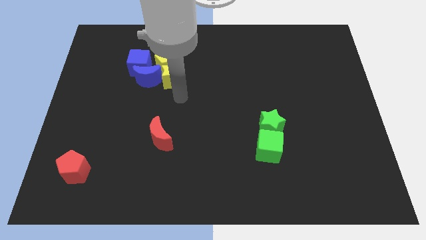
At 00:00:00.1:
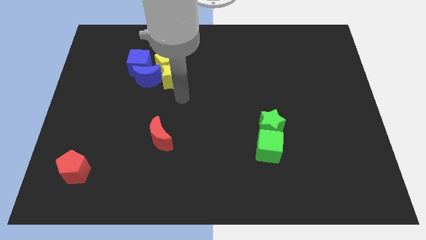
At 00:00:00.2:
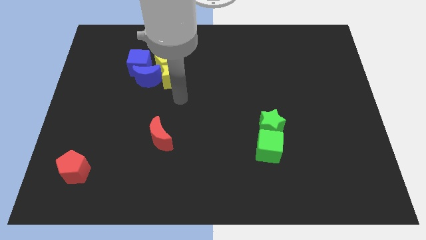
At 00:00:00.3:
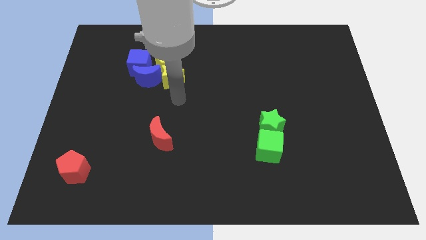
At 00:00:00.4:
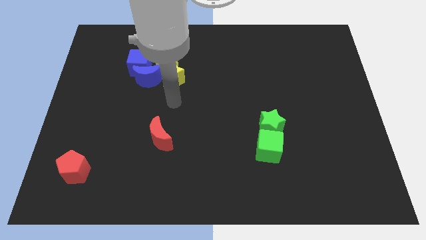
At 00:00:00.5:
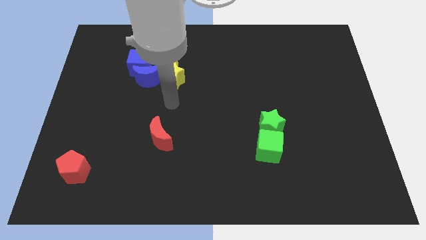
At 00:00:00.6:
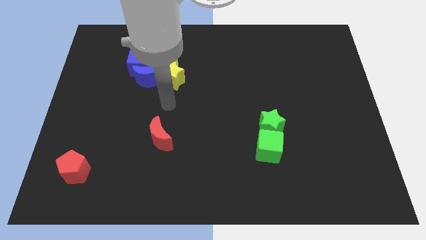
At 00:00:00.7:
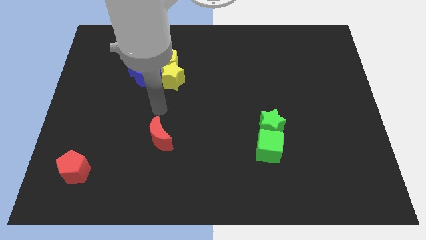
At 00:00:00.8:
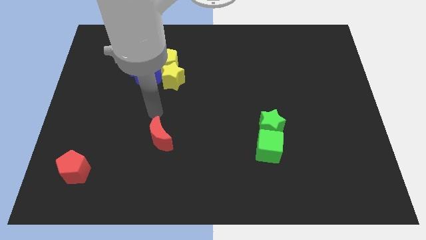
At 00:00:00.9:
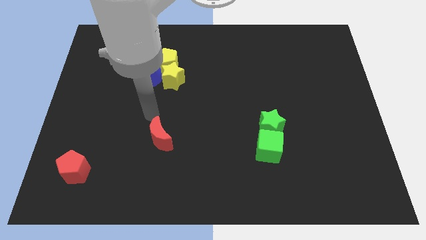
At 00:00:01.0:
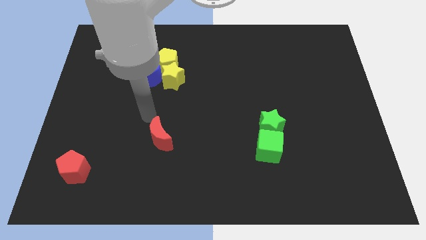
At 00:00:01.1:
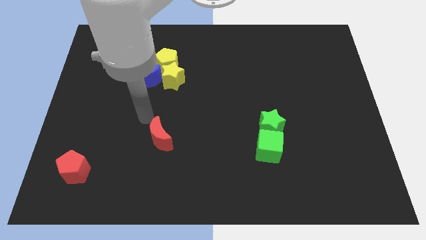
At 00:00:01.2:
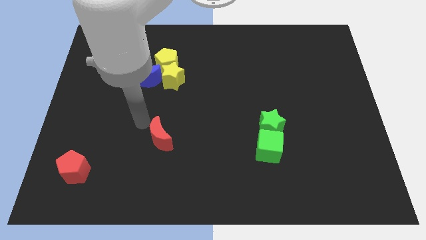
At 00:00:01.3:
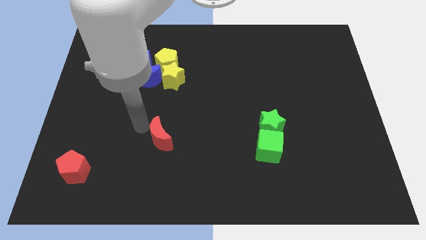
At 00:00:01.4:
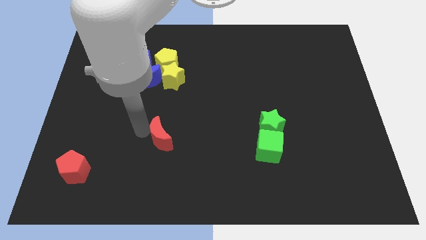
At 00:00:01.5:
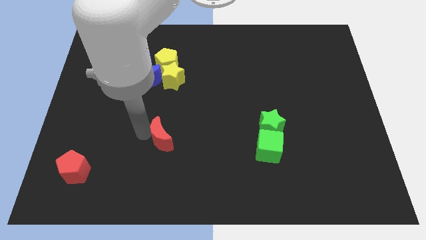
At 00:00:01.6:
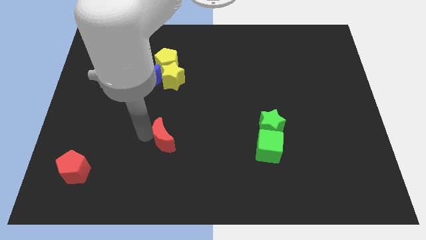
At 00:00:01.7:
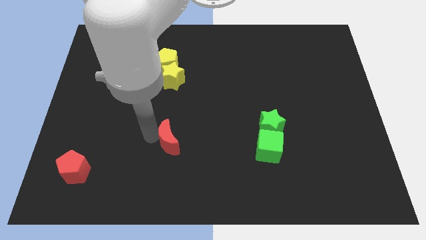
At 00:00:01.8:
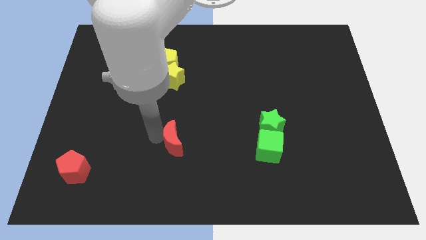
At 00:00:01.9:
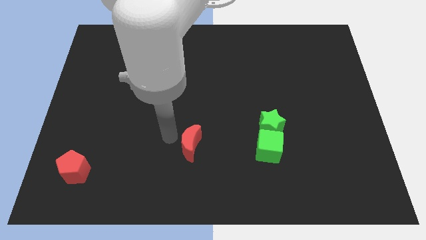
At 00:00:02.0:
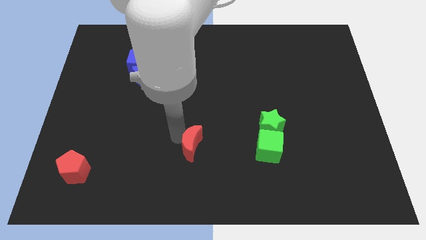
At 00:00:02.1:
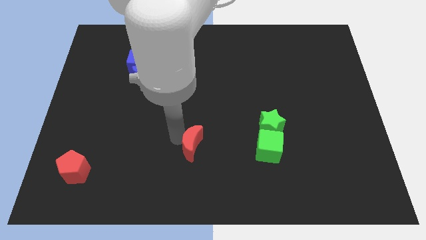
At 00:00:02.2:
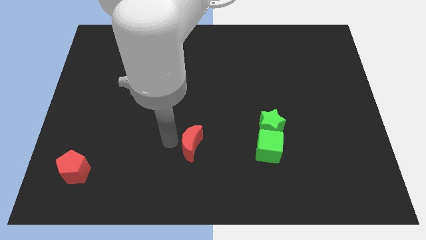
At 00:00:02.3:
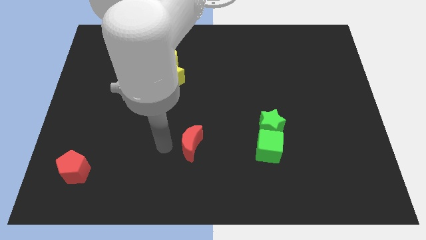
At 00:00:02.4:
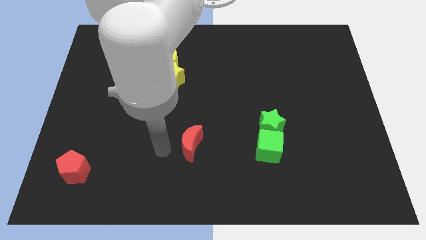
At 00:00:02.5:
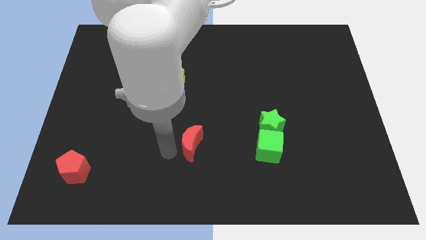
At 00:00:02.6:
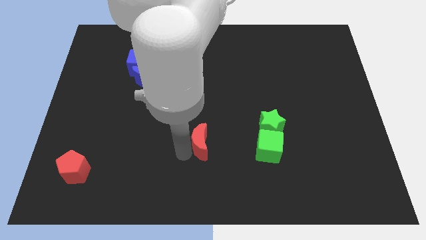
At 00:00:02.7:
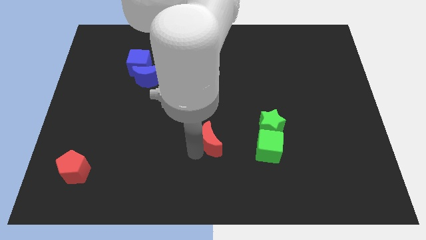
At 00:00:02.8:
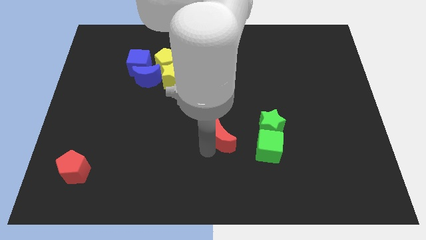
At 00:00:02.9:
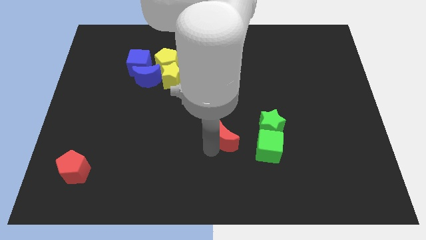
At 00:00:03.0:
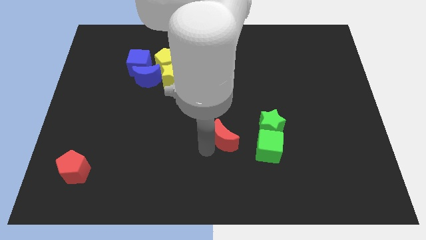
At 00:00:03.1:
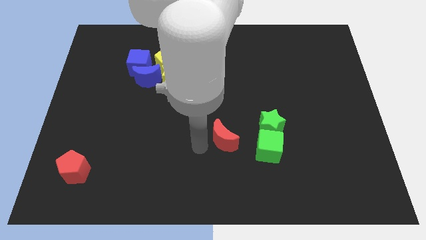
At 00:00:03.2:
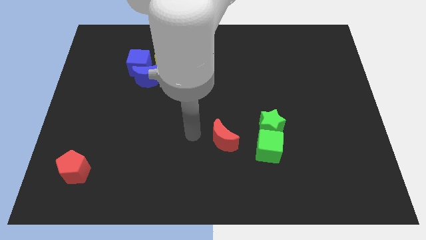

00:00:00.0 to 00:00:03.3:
slide the red crescent towards the green blocks

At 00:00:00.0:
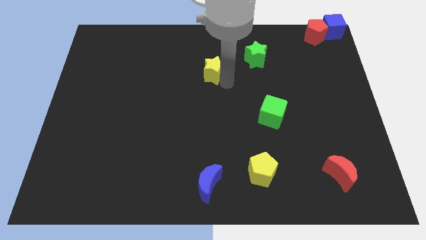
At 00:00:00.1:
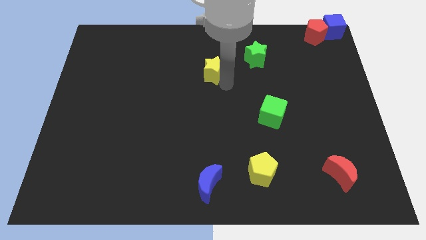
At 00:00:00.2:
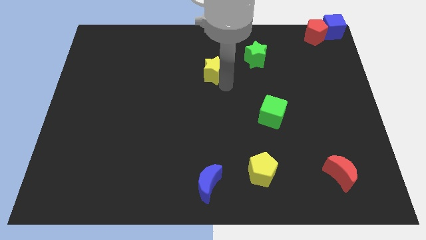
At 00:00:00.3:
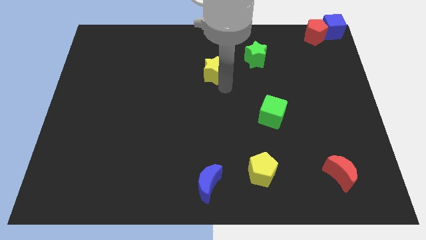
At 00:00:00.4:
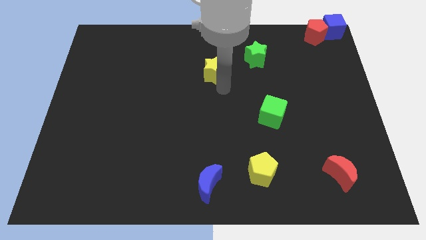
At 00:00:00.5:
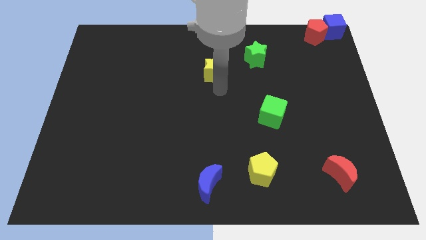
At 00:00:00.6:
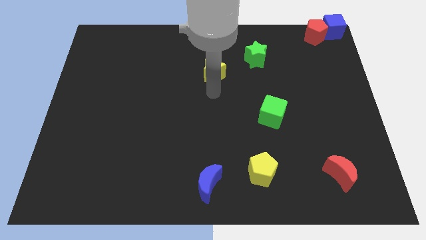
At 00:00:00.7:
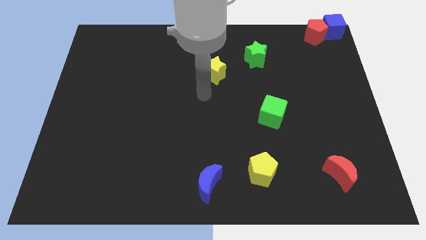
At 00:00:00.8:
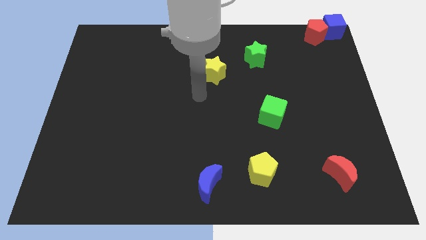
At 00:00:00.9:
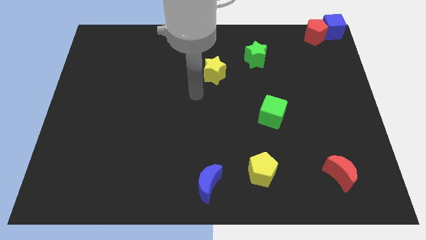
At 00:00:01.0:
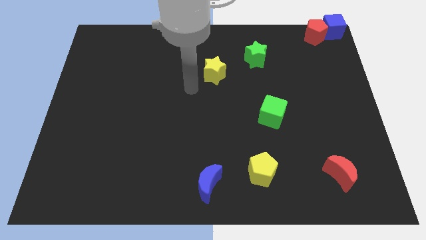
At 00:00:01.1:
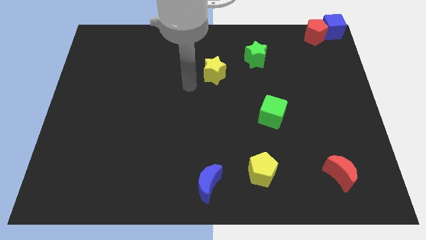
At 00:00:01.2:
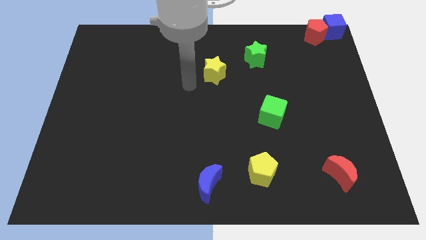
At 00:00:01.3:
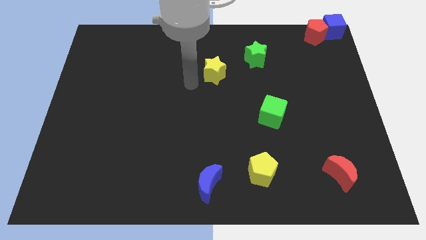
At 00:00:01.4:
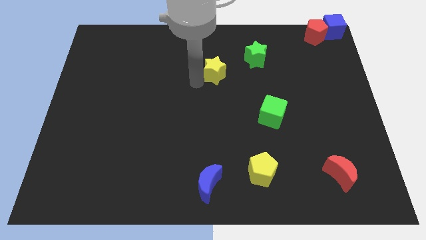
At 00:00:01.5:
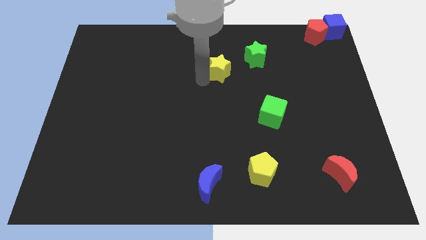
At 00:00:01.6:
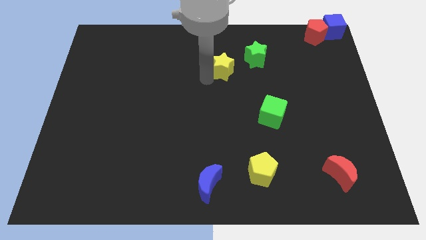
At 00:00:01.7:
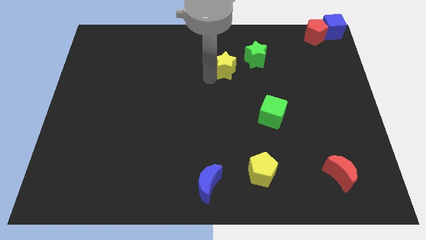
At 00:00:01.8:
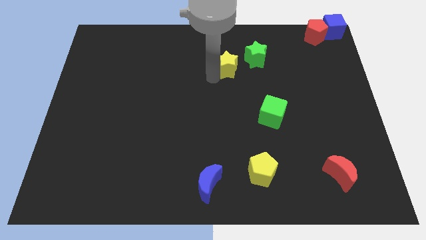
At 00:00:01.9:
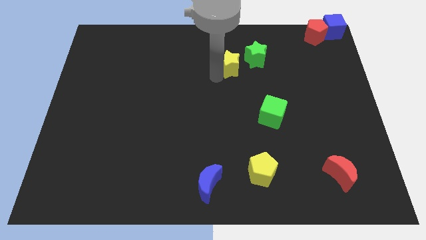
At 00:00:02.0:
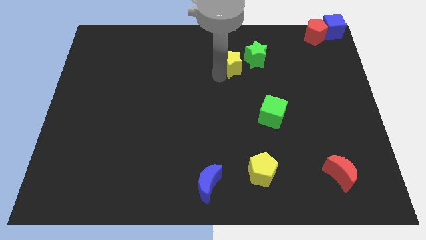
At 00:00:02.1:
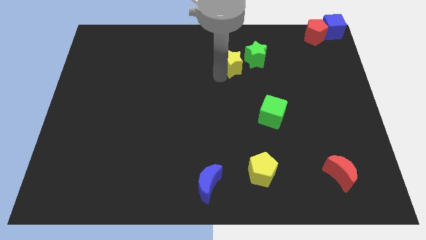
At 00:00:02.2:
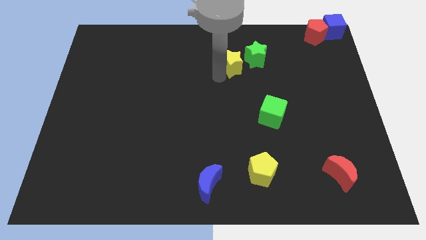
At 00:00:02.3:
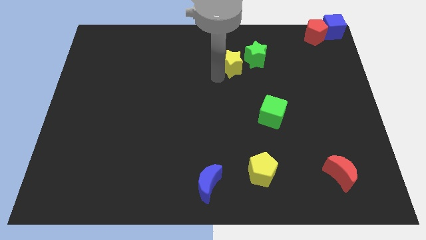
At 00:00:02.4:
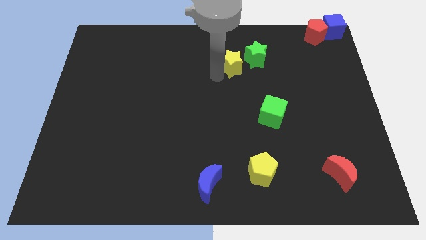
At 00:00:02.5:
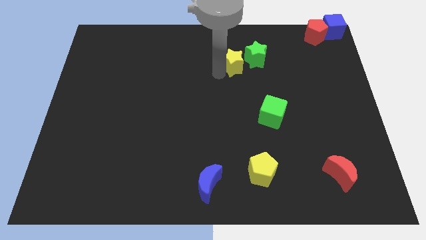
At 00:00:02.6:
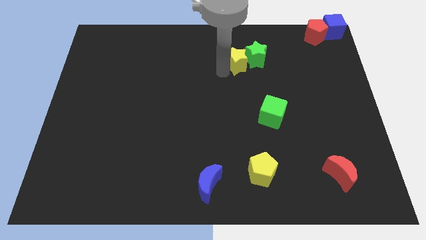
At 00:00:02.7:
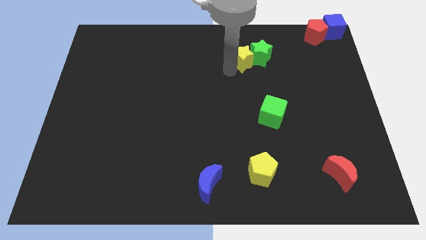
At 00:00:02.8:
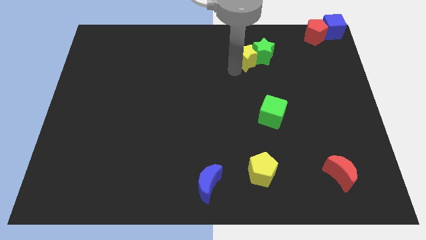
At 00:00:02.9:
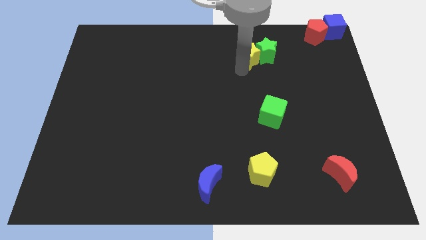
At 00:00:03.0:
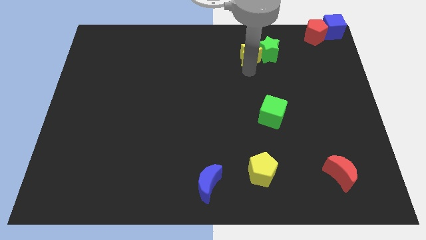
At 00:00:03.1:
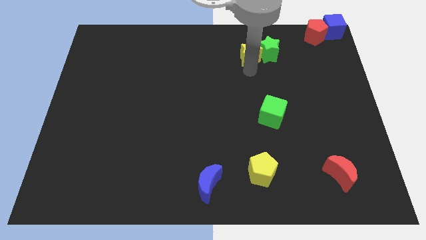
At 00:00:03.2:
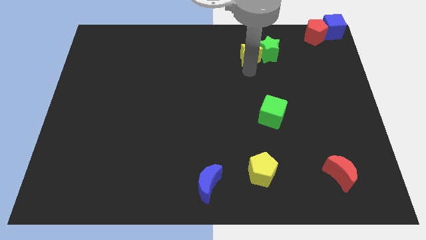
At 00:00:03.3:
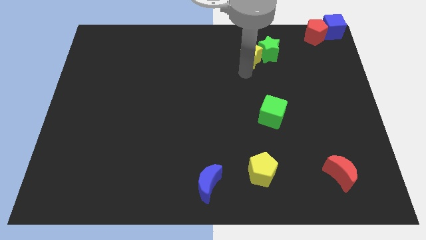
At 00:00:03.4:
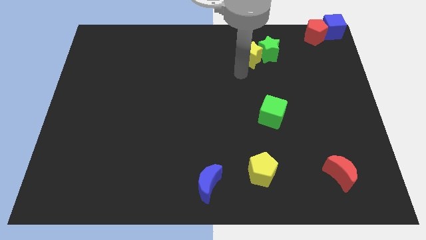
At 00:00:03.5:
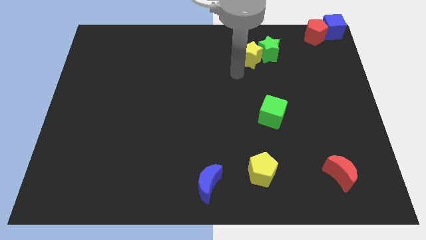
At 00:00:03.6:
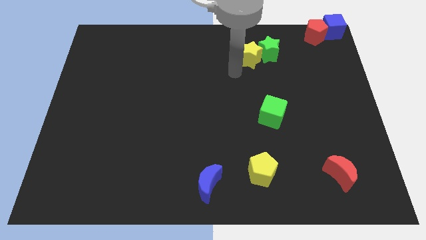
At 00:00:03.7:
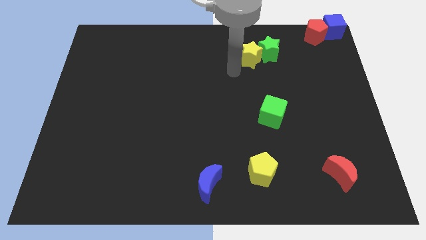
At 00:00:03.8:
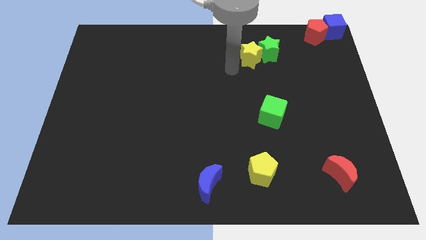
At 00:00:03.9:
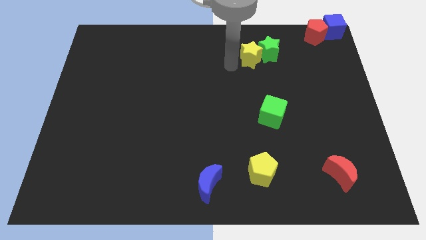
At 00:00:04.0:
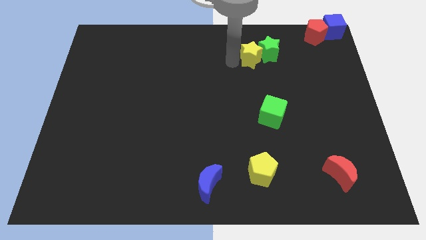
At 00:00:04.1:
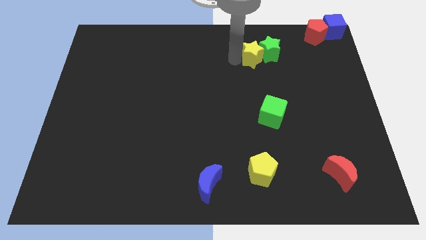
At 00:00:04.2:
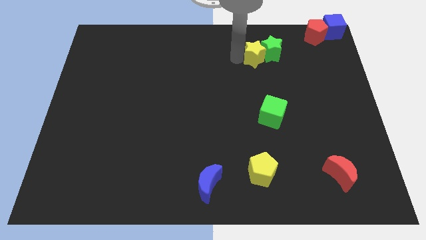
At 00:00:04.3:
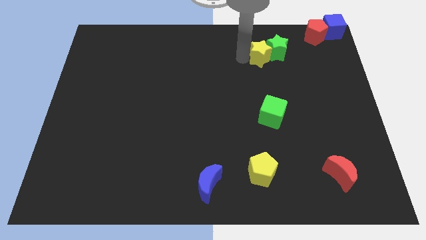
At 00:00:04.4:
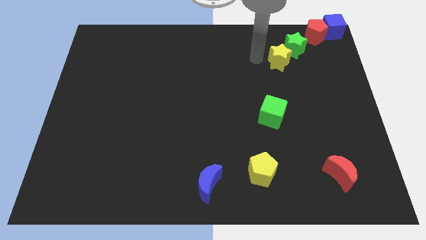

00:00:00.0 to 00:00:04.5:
move the yellow star into the green star

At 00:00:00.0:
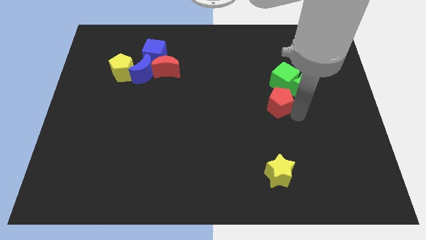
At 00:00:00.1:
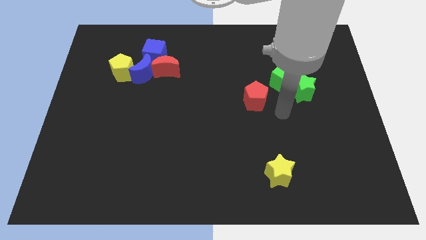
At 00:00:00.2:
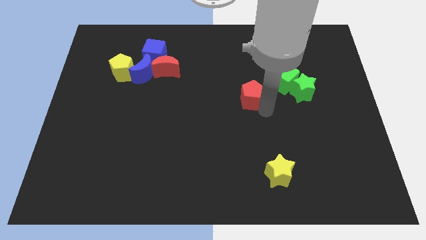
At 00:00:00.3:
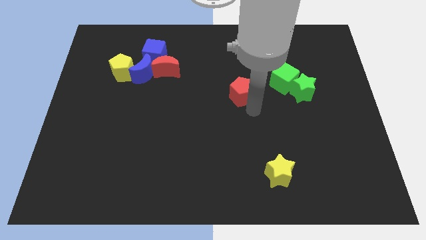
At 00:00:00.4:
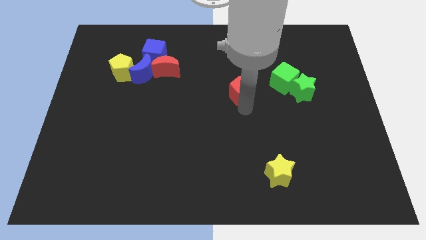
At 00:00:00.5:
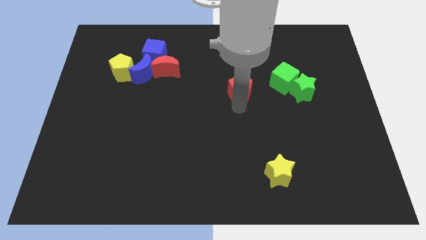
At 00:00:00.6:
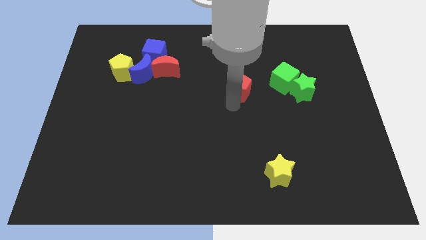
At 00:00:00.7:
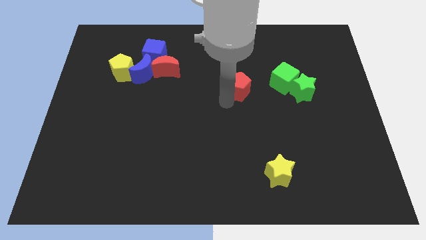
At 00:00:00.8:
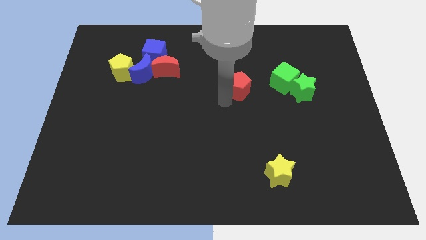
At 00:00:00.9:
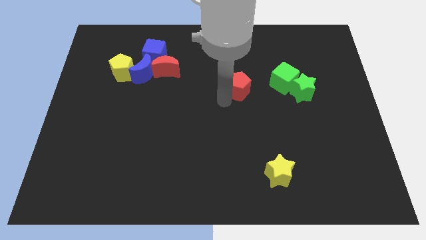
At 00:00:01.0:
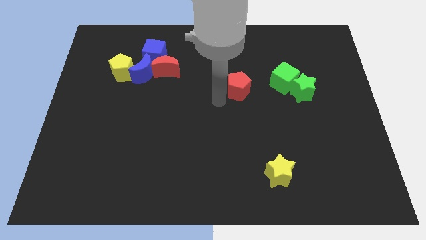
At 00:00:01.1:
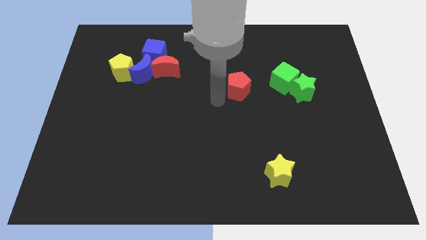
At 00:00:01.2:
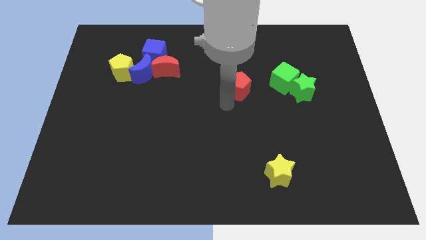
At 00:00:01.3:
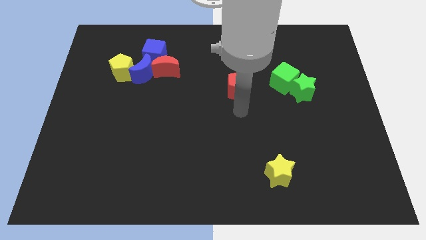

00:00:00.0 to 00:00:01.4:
push the red pentagon to the center of the board
